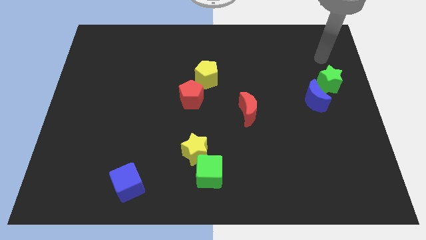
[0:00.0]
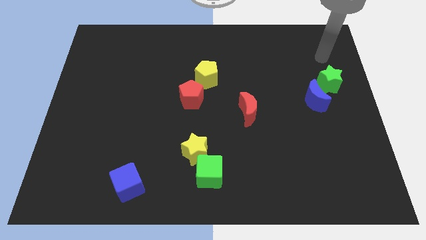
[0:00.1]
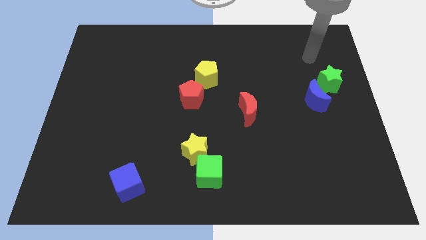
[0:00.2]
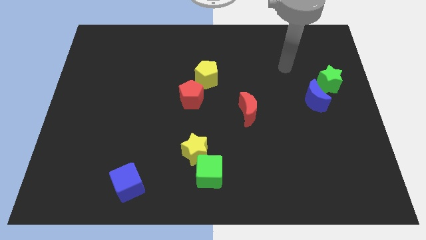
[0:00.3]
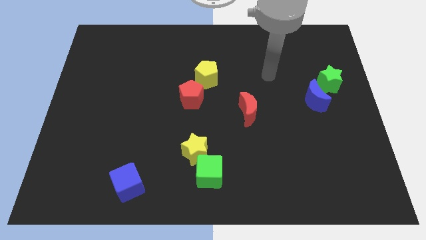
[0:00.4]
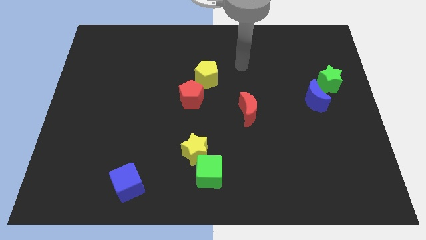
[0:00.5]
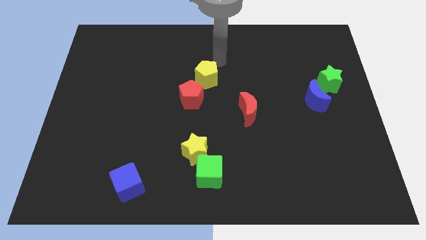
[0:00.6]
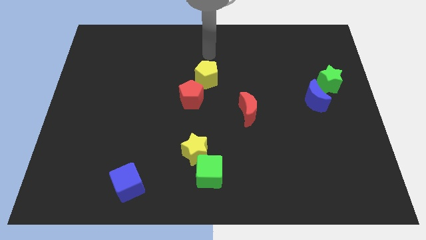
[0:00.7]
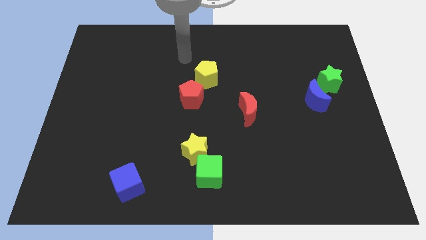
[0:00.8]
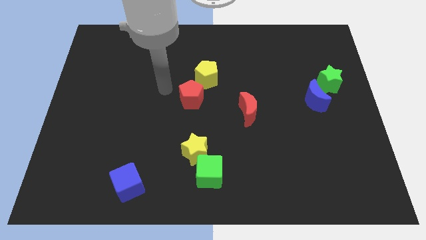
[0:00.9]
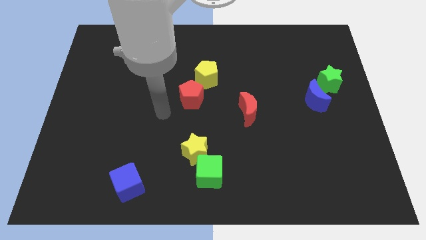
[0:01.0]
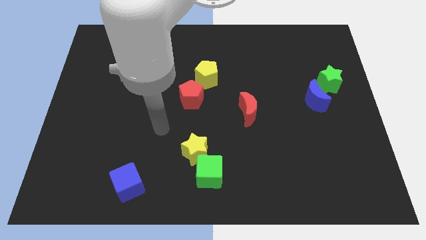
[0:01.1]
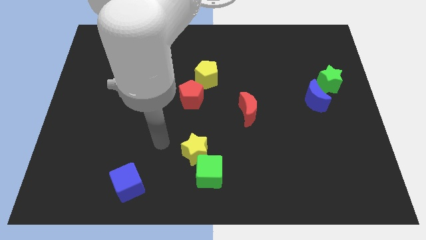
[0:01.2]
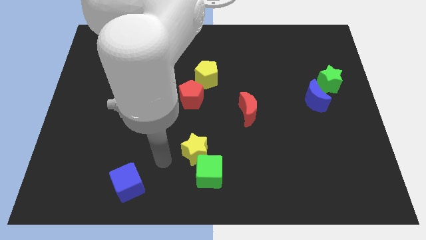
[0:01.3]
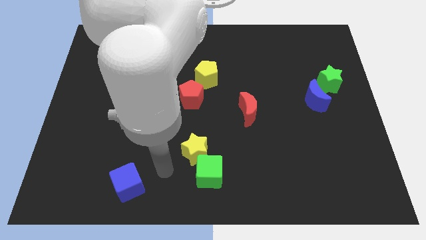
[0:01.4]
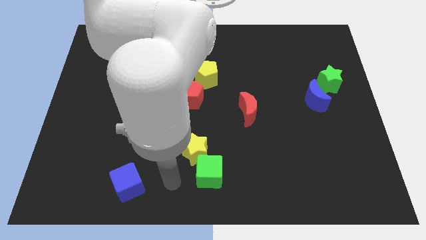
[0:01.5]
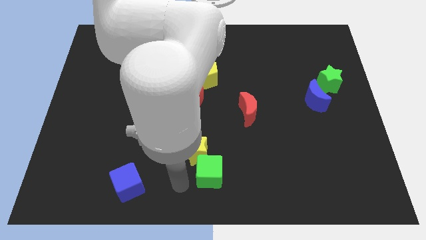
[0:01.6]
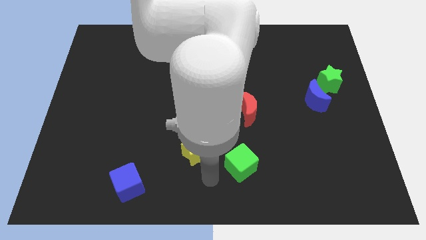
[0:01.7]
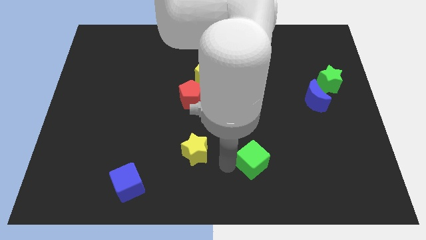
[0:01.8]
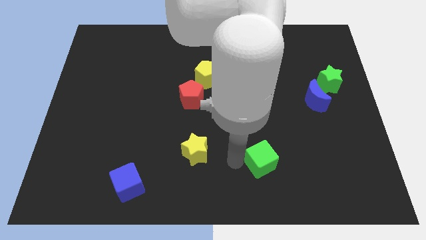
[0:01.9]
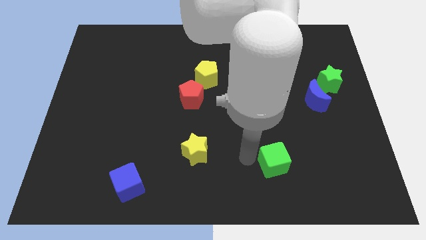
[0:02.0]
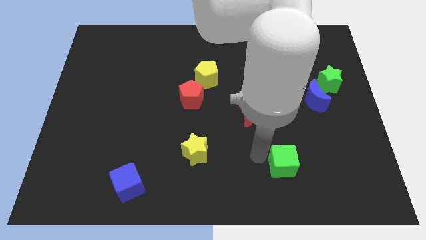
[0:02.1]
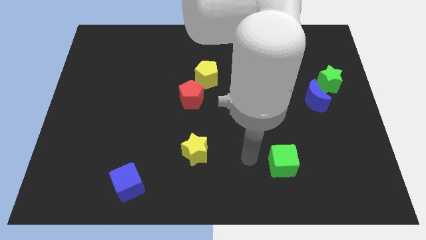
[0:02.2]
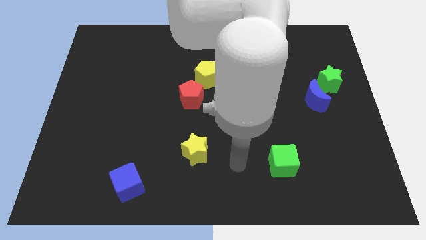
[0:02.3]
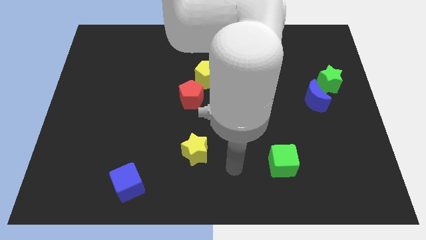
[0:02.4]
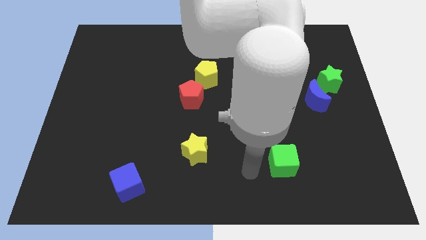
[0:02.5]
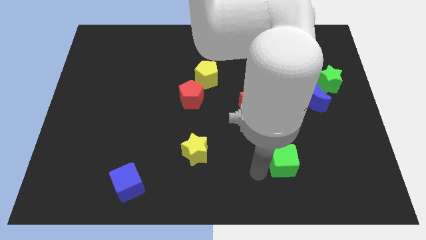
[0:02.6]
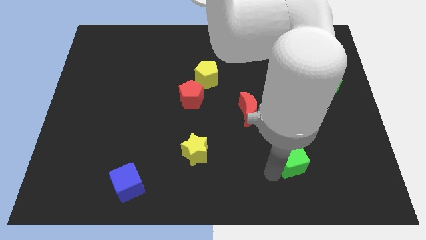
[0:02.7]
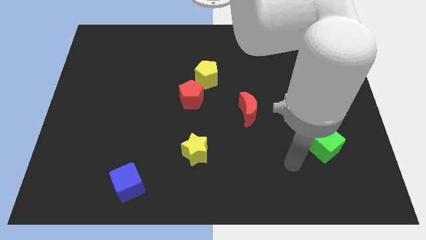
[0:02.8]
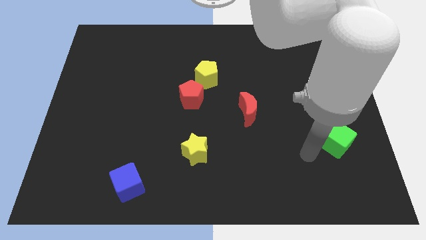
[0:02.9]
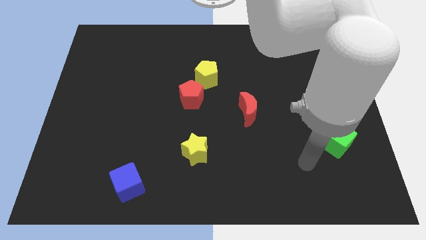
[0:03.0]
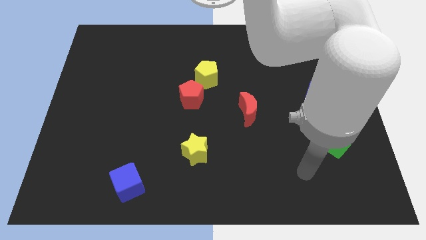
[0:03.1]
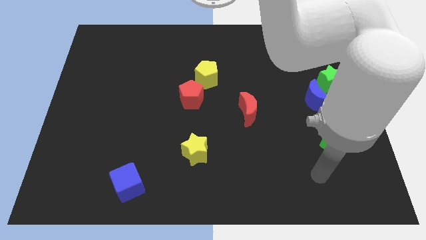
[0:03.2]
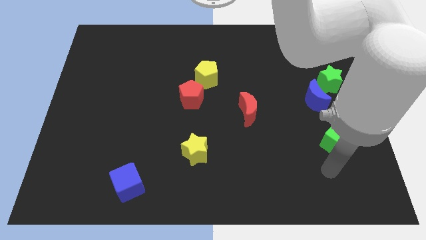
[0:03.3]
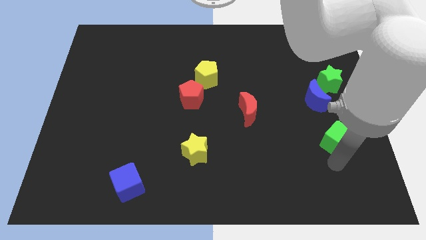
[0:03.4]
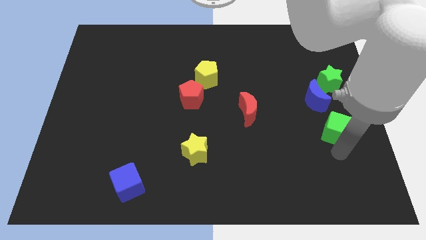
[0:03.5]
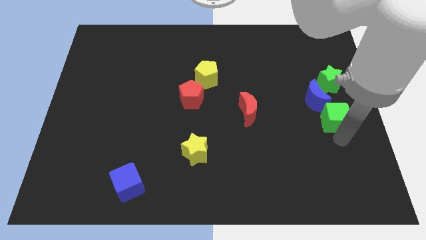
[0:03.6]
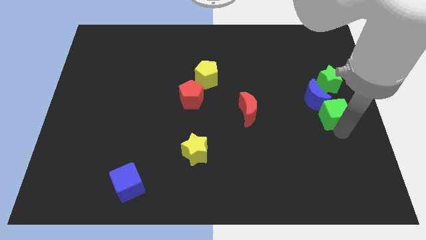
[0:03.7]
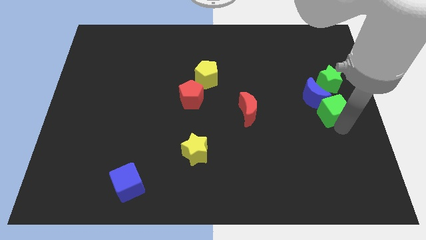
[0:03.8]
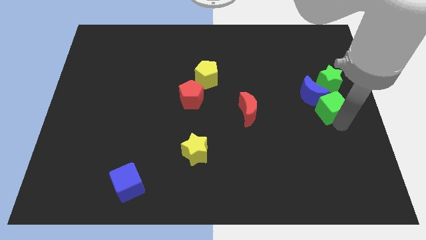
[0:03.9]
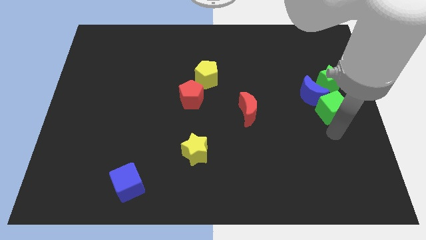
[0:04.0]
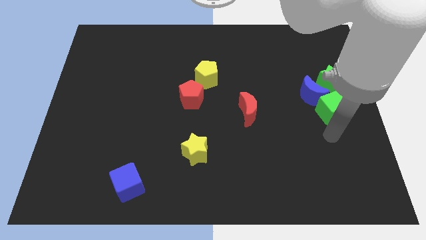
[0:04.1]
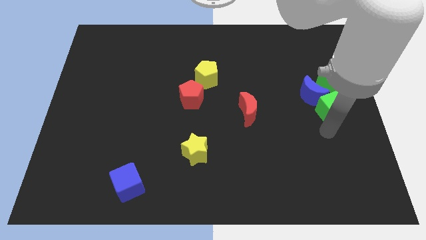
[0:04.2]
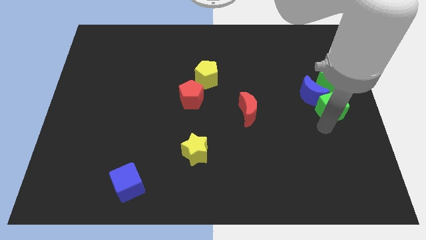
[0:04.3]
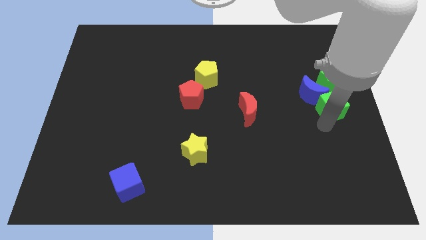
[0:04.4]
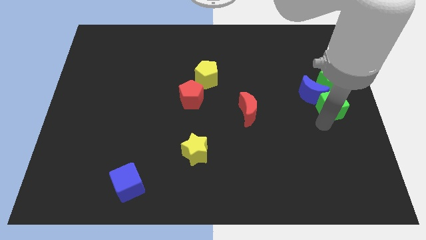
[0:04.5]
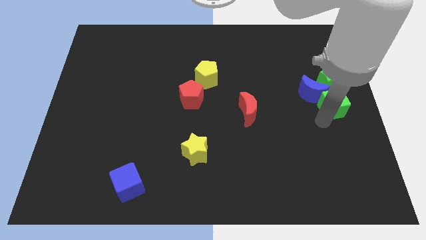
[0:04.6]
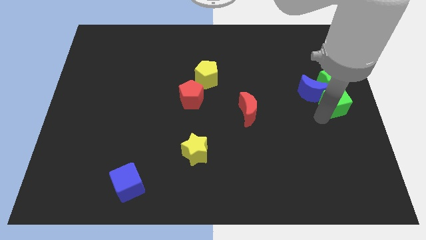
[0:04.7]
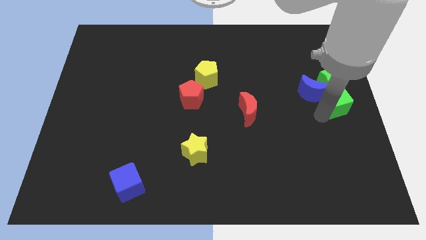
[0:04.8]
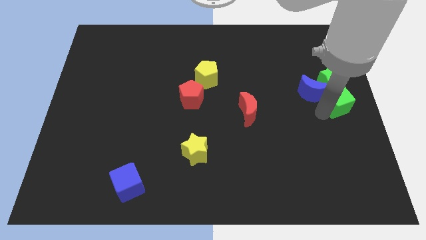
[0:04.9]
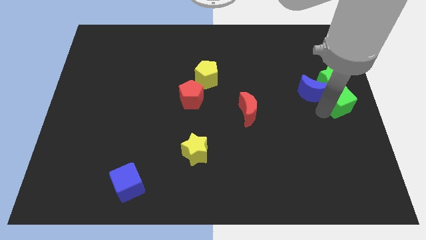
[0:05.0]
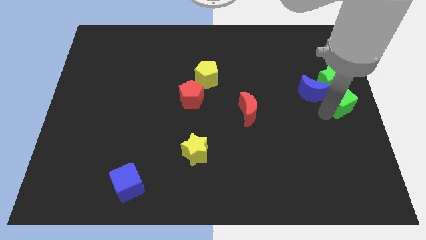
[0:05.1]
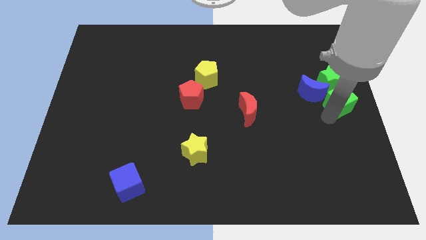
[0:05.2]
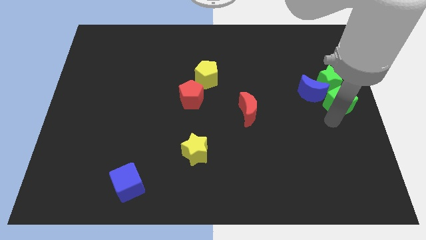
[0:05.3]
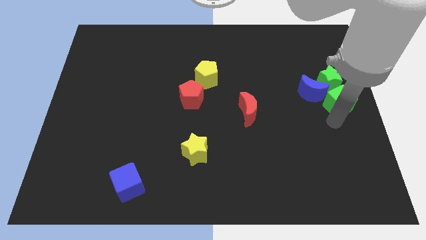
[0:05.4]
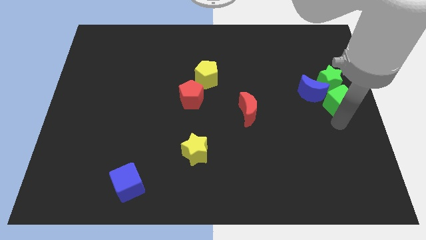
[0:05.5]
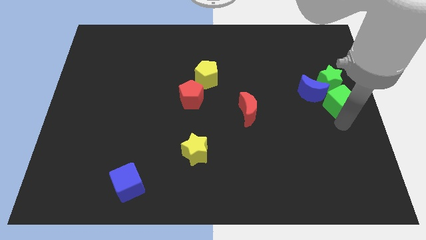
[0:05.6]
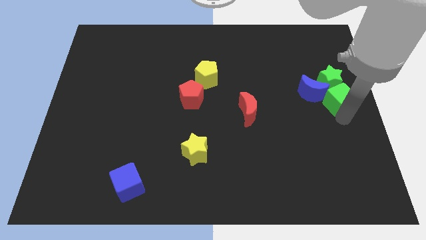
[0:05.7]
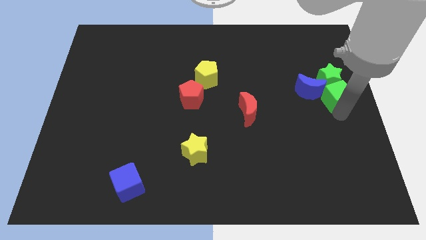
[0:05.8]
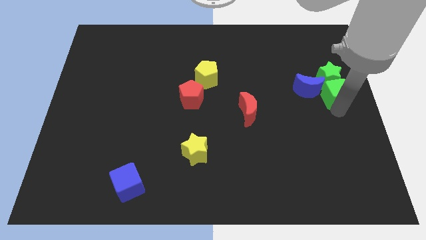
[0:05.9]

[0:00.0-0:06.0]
push the green cube close to the green star

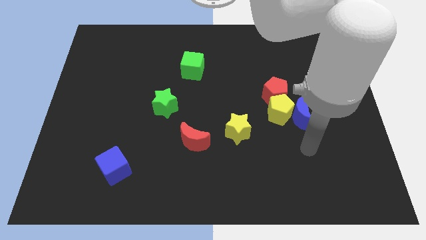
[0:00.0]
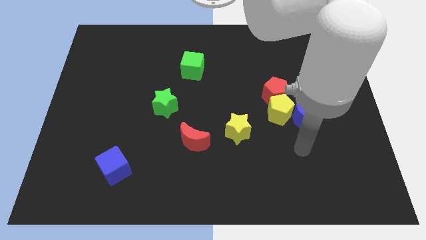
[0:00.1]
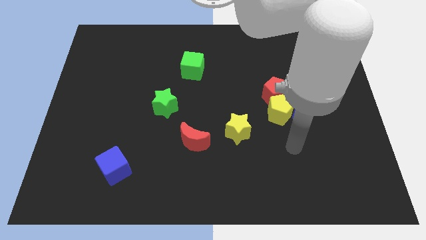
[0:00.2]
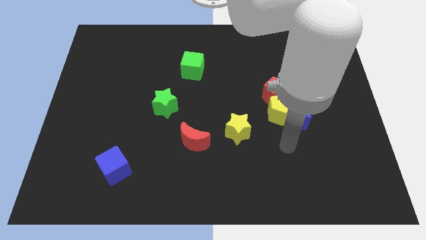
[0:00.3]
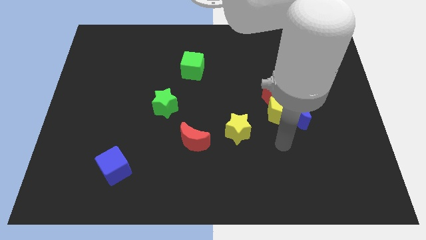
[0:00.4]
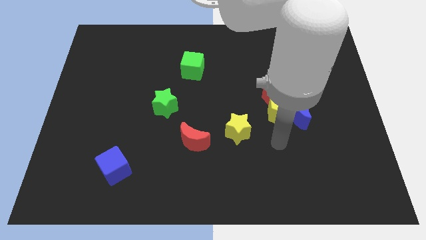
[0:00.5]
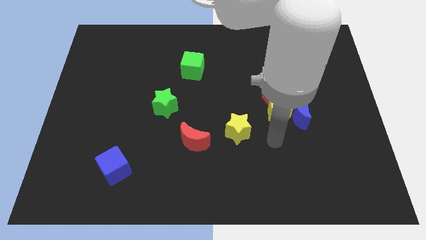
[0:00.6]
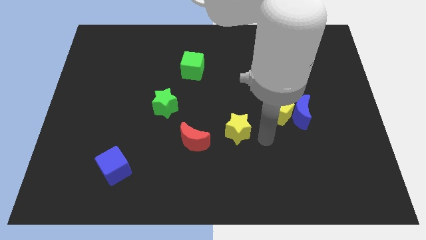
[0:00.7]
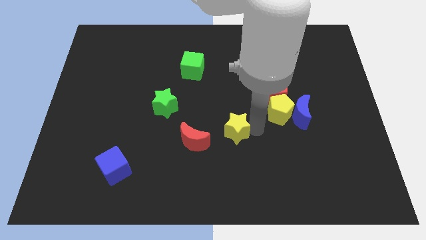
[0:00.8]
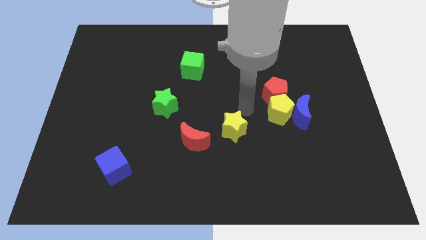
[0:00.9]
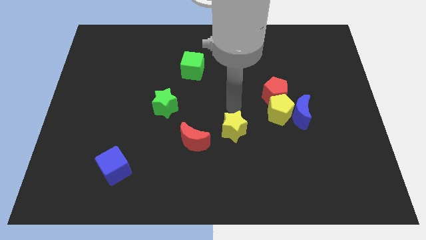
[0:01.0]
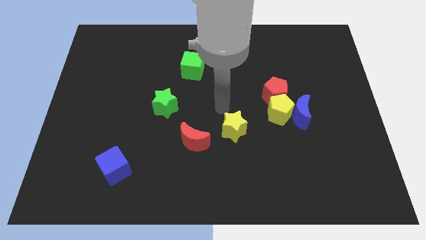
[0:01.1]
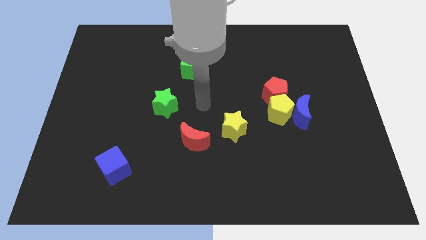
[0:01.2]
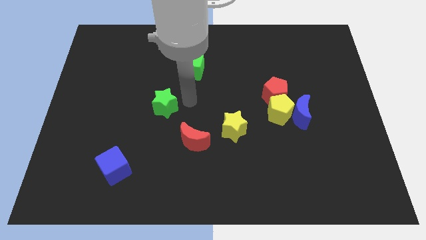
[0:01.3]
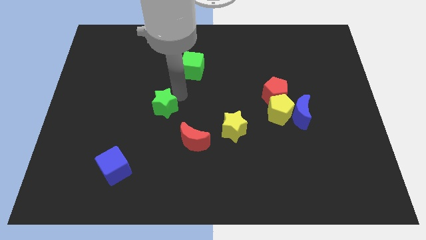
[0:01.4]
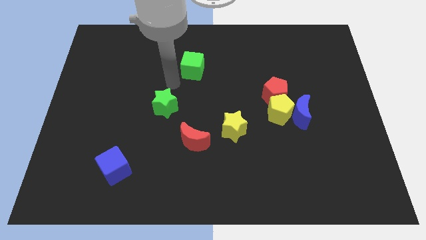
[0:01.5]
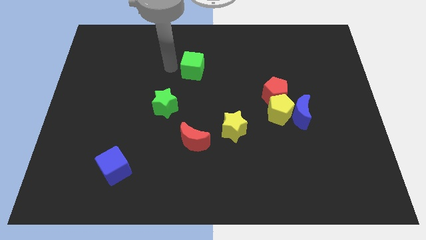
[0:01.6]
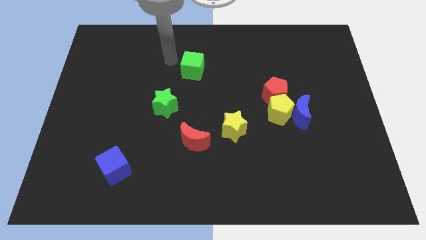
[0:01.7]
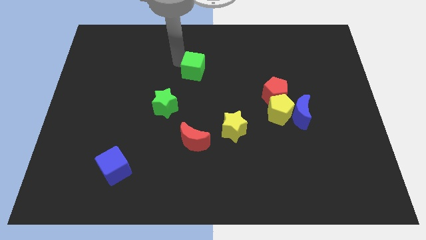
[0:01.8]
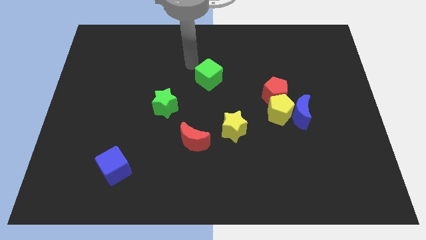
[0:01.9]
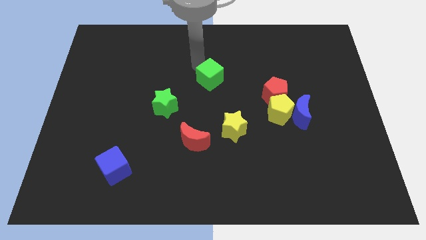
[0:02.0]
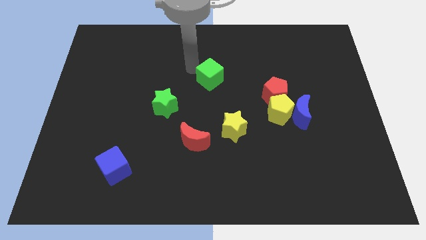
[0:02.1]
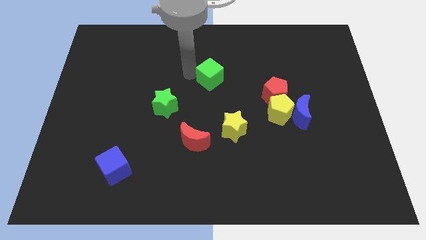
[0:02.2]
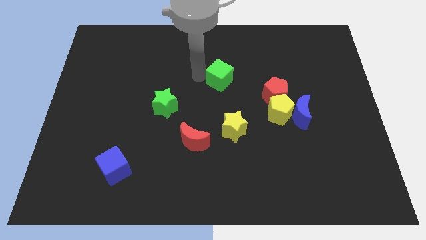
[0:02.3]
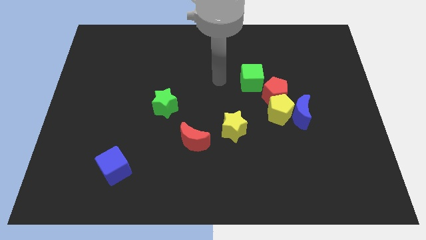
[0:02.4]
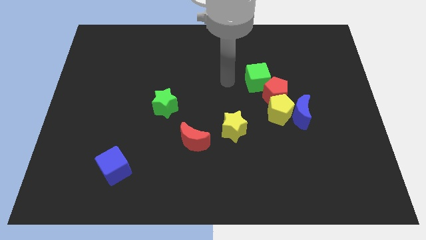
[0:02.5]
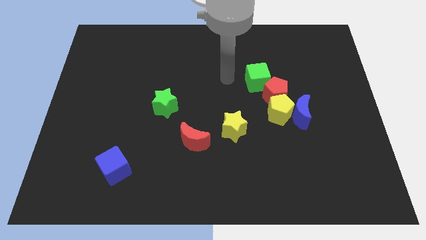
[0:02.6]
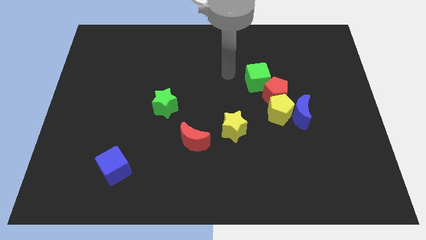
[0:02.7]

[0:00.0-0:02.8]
push the green cube towards the red pentagon

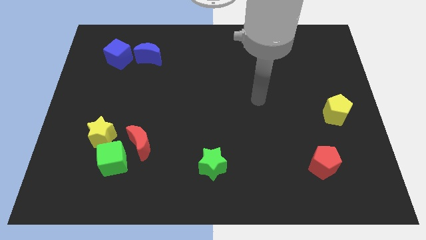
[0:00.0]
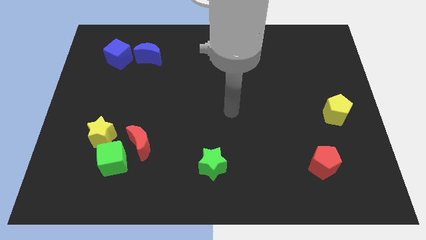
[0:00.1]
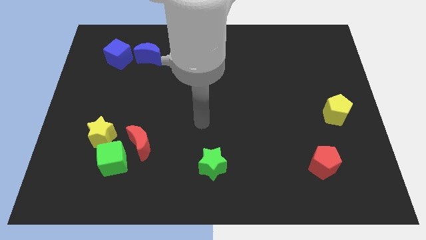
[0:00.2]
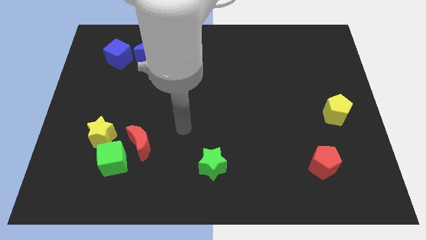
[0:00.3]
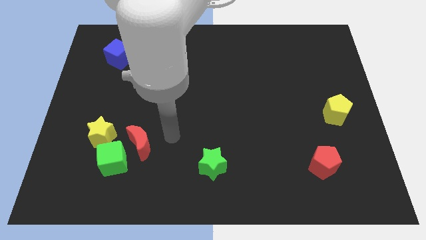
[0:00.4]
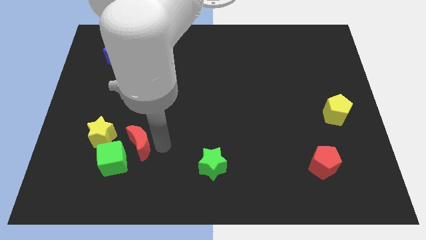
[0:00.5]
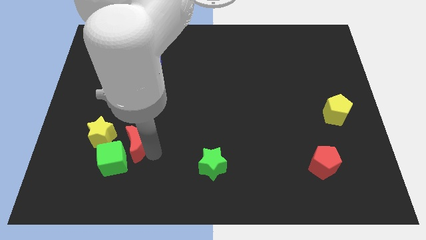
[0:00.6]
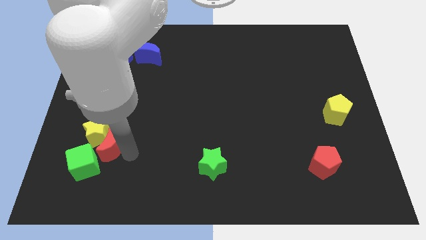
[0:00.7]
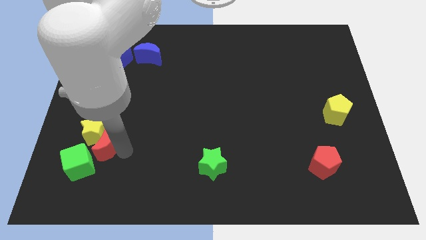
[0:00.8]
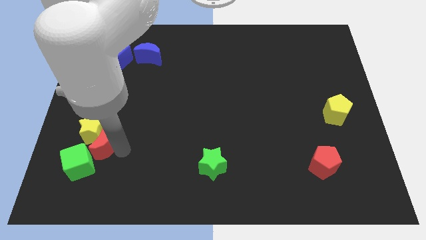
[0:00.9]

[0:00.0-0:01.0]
move the red moon towards the yellow star
